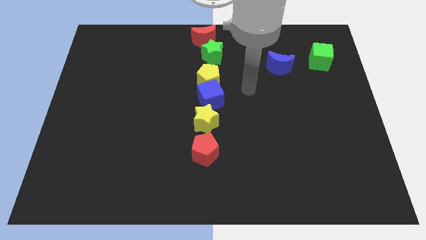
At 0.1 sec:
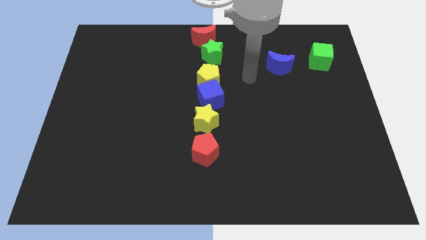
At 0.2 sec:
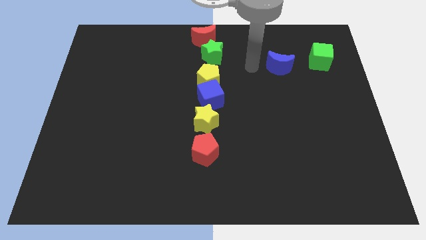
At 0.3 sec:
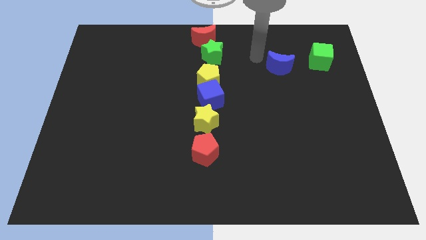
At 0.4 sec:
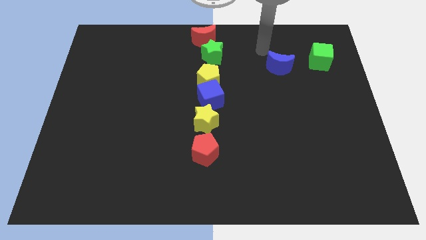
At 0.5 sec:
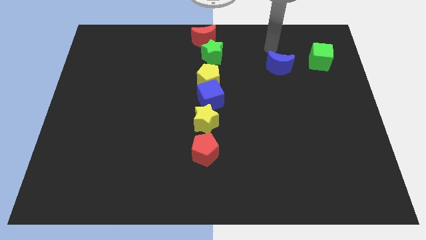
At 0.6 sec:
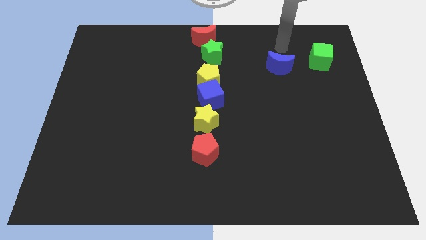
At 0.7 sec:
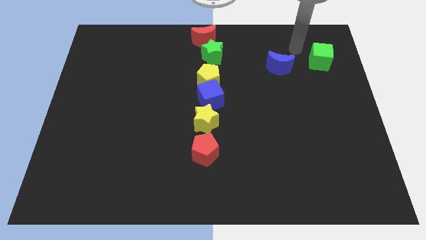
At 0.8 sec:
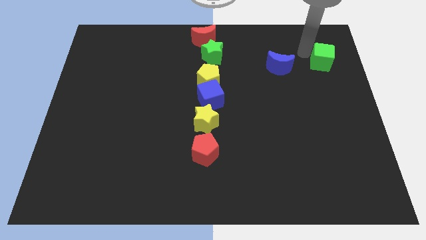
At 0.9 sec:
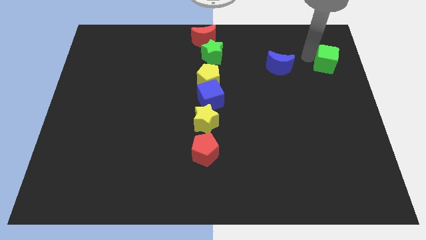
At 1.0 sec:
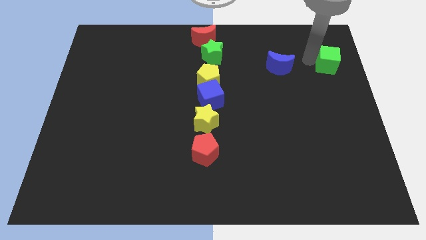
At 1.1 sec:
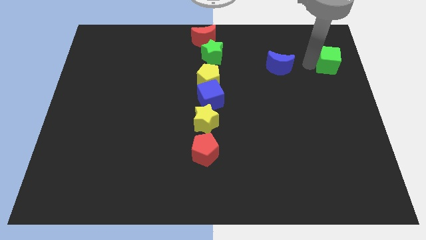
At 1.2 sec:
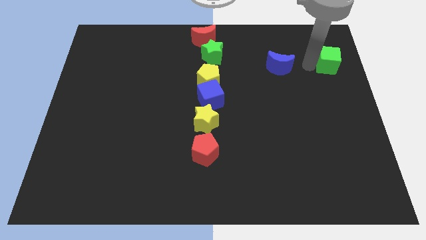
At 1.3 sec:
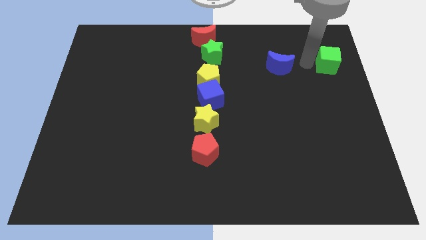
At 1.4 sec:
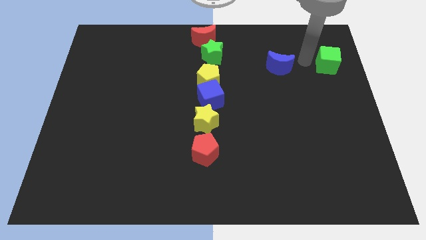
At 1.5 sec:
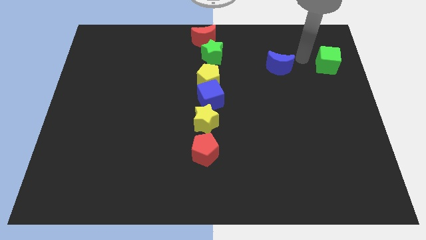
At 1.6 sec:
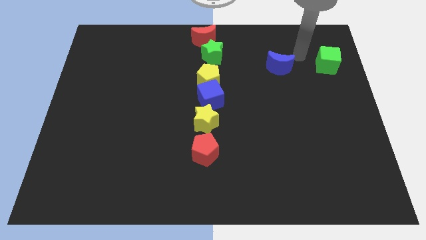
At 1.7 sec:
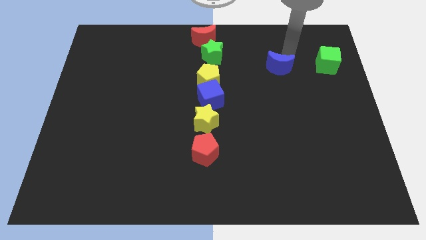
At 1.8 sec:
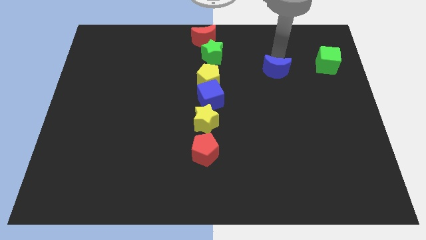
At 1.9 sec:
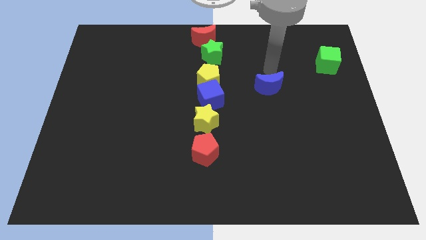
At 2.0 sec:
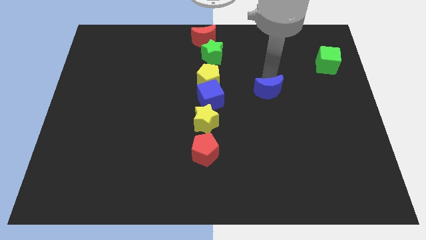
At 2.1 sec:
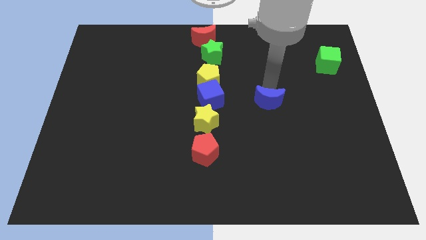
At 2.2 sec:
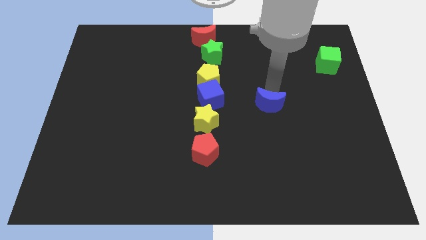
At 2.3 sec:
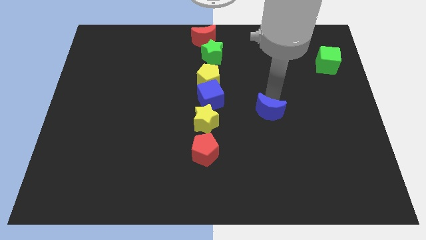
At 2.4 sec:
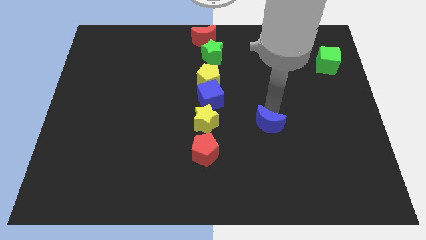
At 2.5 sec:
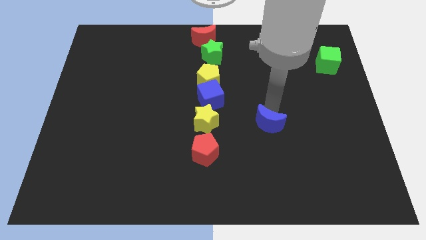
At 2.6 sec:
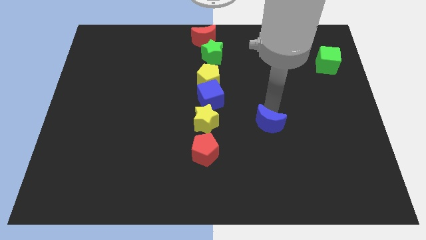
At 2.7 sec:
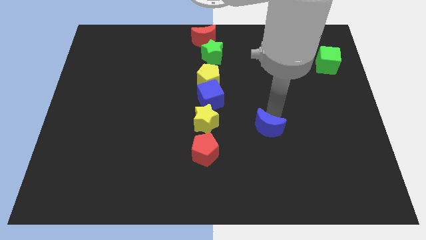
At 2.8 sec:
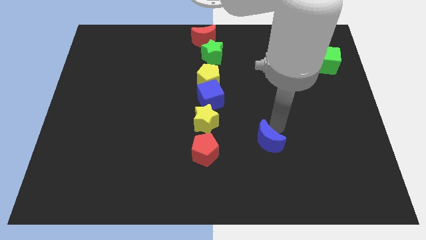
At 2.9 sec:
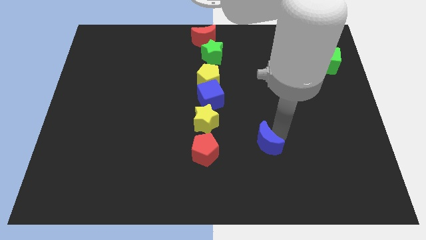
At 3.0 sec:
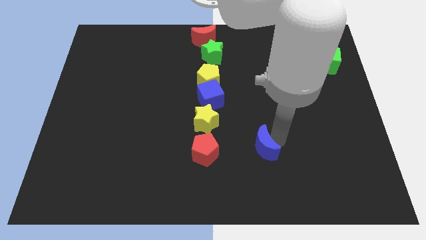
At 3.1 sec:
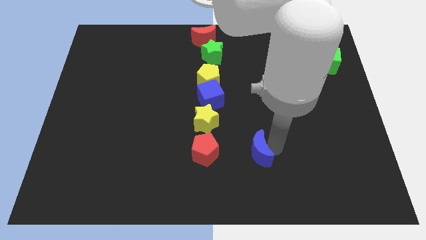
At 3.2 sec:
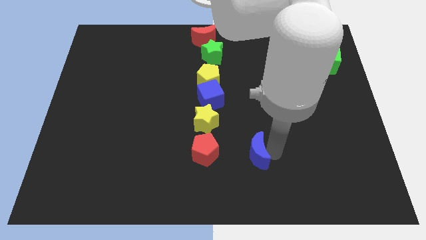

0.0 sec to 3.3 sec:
place blue moon to the right of red pentagon

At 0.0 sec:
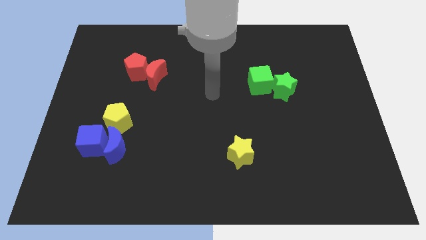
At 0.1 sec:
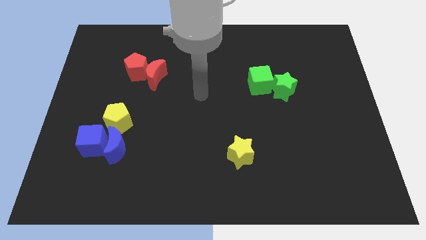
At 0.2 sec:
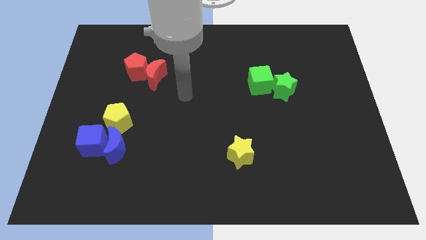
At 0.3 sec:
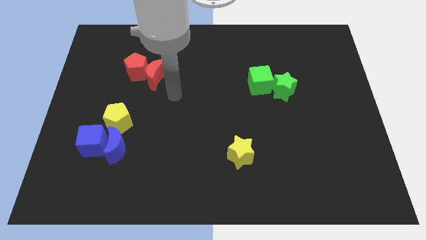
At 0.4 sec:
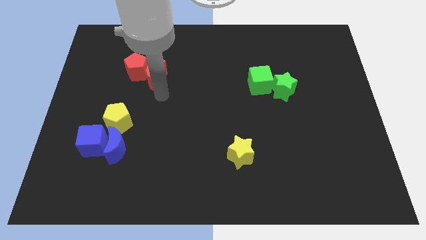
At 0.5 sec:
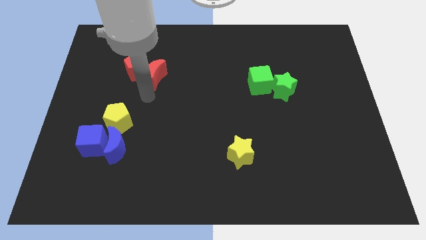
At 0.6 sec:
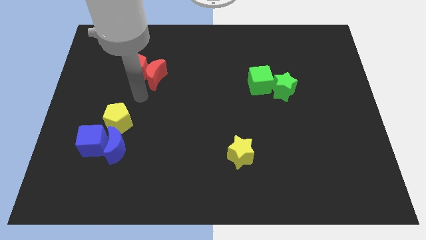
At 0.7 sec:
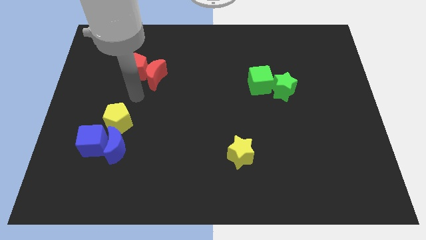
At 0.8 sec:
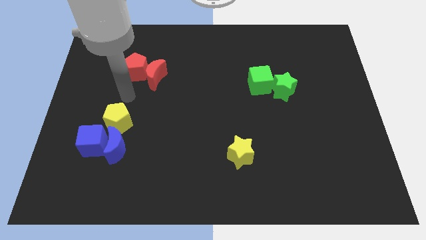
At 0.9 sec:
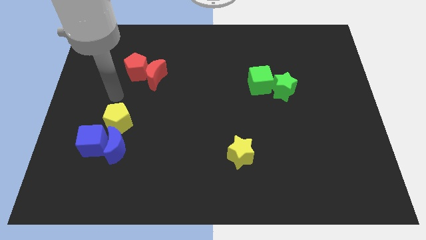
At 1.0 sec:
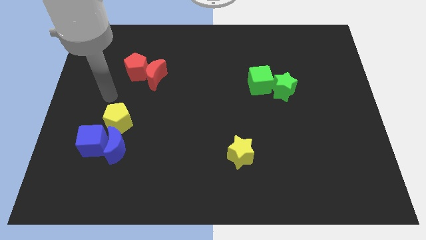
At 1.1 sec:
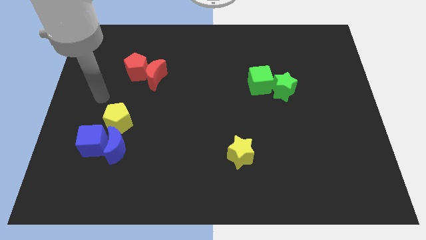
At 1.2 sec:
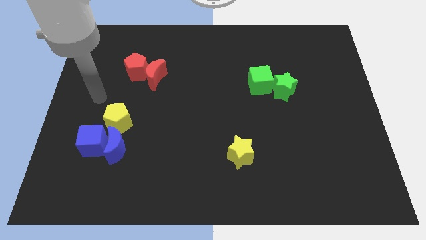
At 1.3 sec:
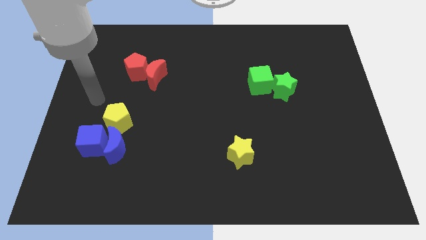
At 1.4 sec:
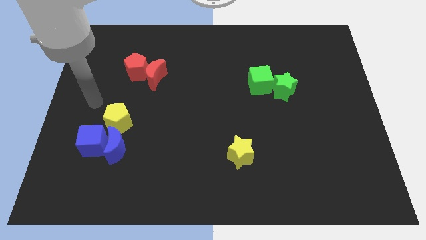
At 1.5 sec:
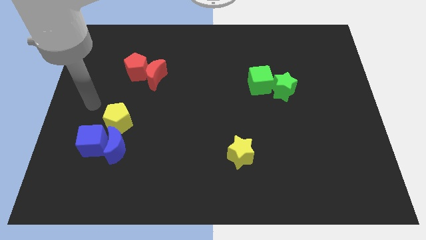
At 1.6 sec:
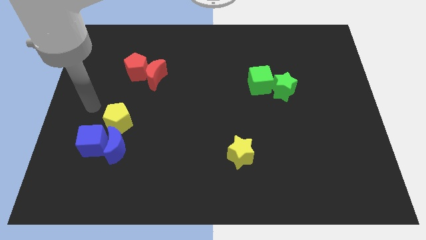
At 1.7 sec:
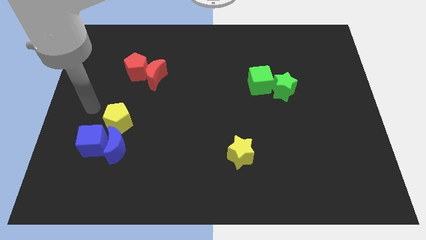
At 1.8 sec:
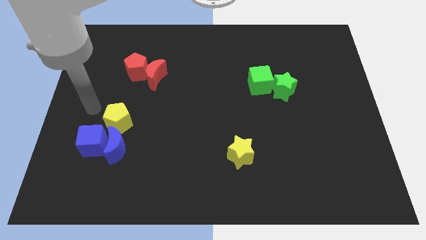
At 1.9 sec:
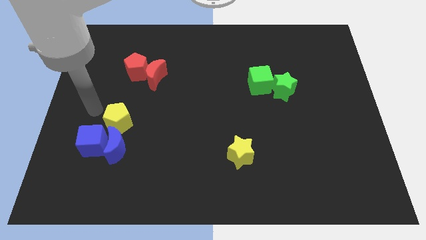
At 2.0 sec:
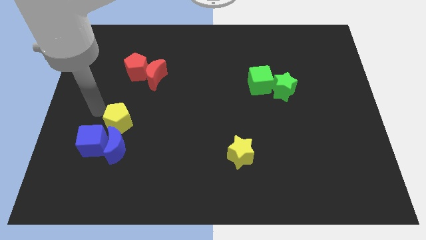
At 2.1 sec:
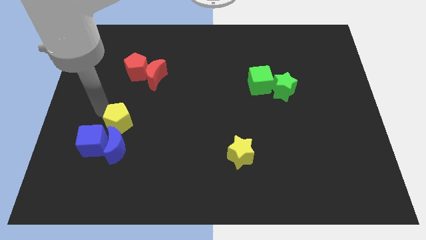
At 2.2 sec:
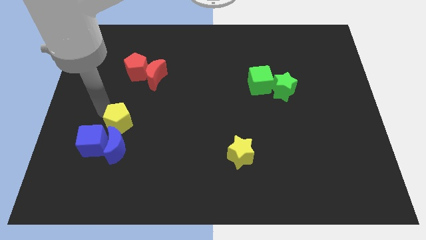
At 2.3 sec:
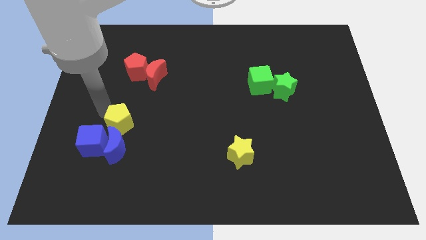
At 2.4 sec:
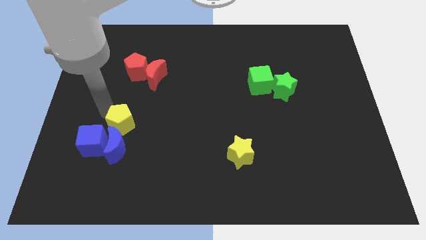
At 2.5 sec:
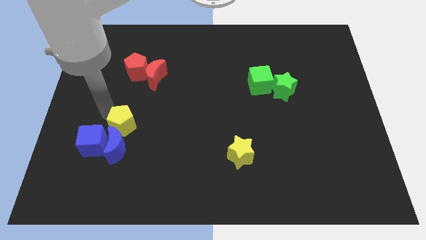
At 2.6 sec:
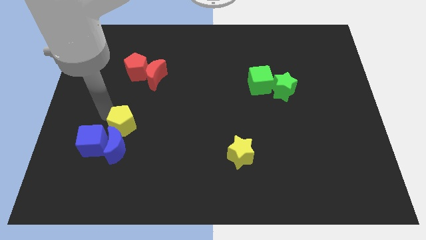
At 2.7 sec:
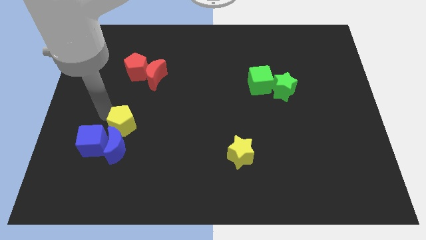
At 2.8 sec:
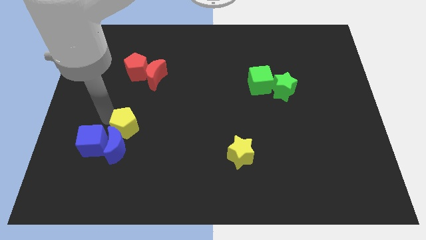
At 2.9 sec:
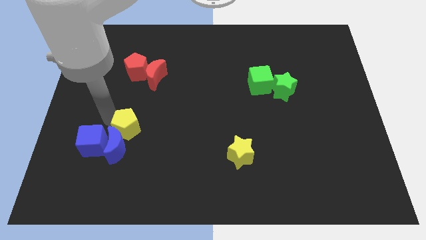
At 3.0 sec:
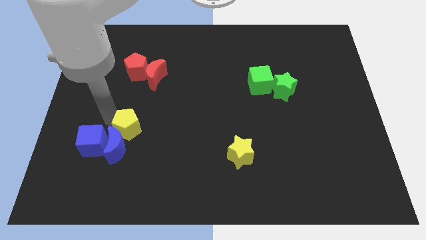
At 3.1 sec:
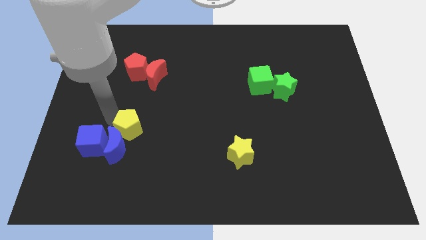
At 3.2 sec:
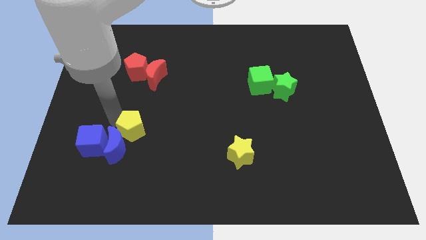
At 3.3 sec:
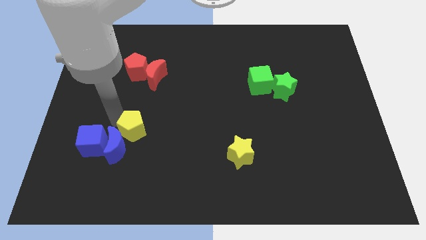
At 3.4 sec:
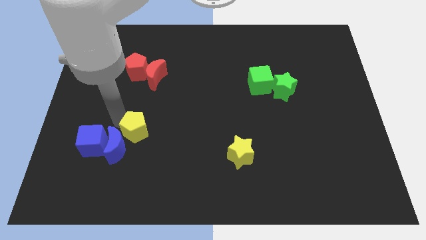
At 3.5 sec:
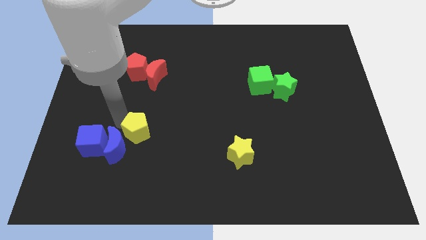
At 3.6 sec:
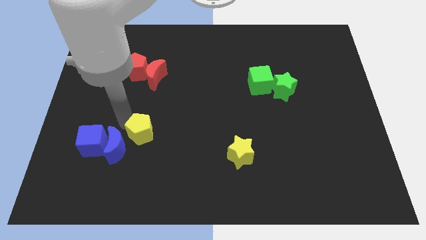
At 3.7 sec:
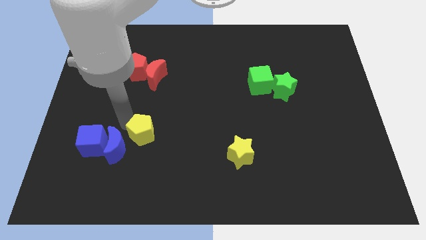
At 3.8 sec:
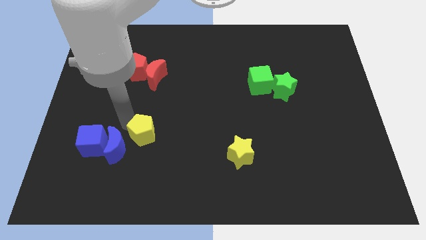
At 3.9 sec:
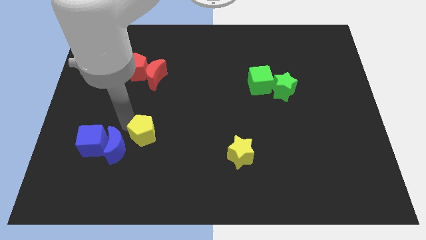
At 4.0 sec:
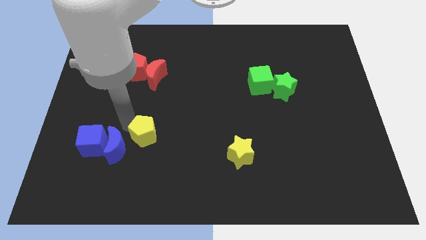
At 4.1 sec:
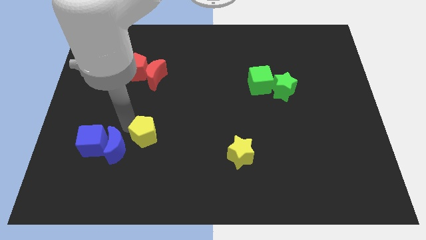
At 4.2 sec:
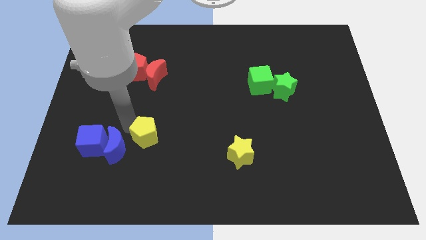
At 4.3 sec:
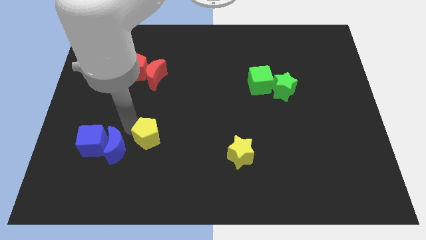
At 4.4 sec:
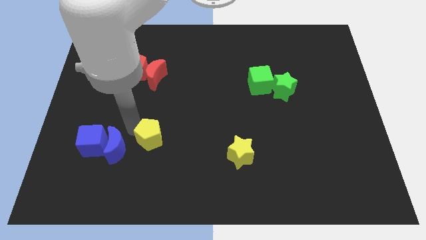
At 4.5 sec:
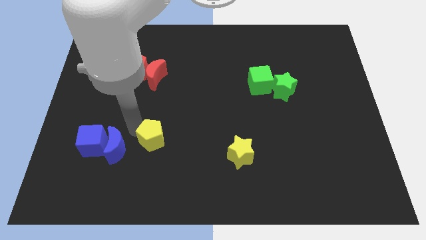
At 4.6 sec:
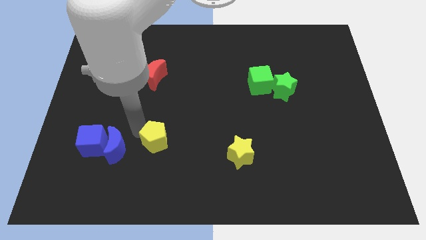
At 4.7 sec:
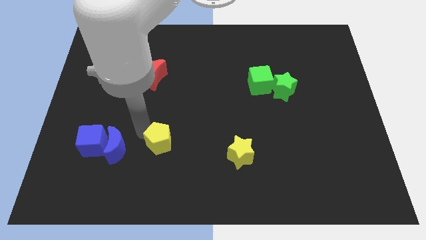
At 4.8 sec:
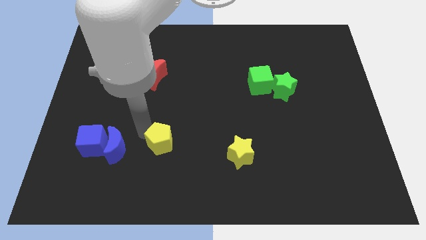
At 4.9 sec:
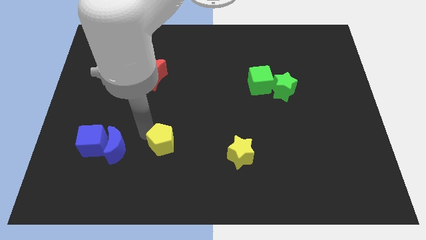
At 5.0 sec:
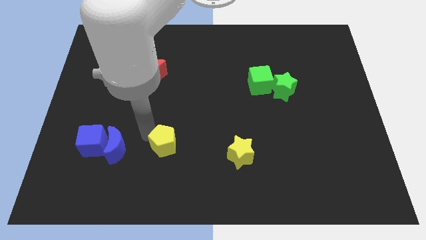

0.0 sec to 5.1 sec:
push yellow pentagon slightly down

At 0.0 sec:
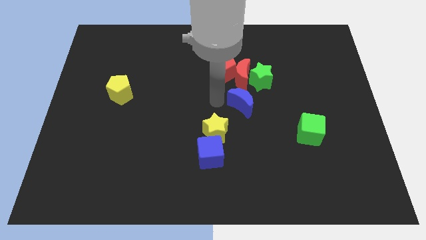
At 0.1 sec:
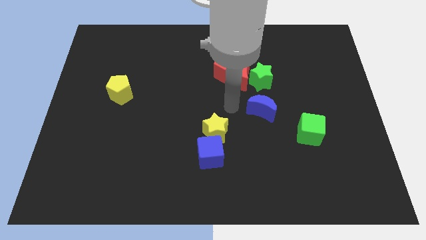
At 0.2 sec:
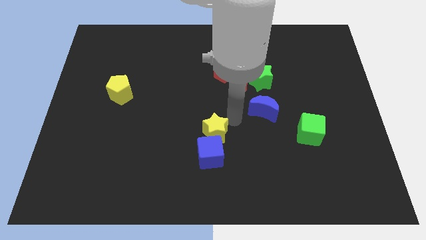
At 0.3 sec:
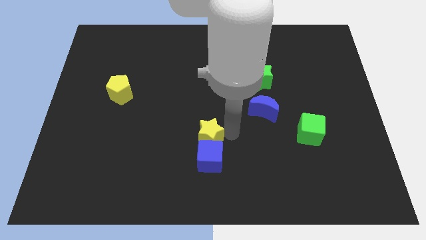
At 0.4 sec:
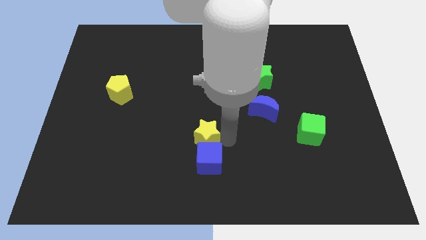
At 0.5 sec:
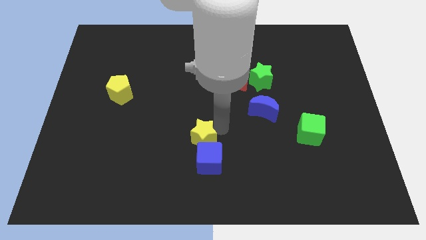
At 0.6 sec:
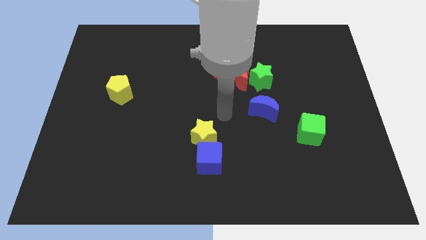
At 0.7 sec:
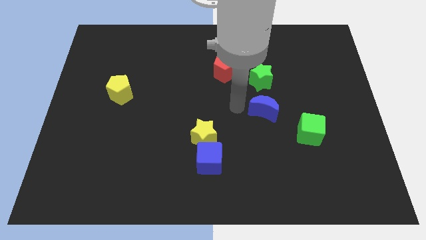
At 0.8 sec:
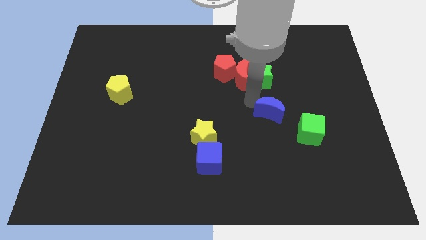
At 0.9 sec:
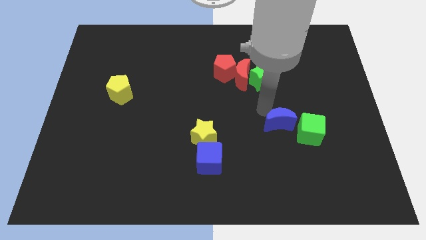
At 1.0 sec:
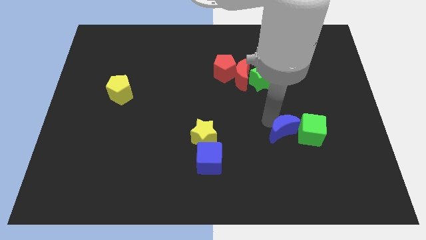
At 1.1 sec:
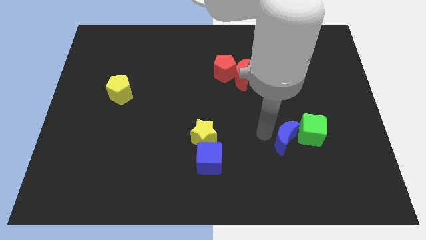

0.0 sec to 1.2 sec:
push the blue moon into the green cube
